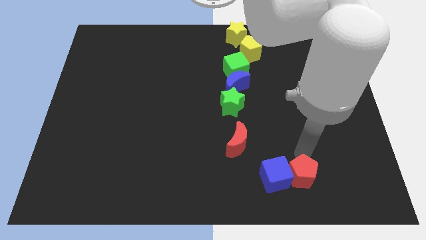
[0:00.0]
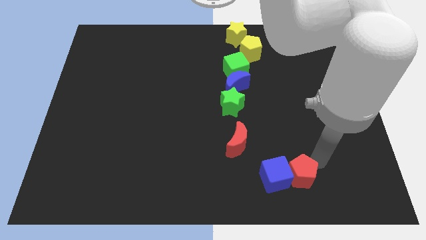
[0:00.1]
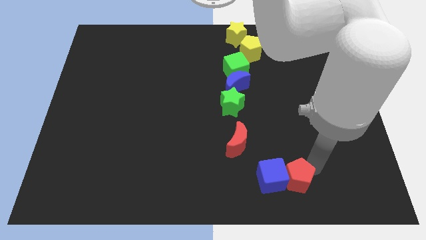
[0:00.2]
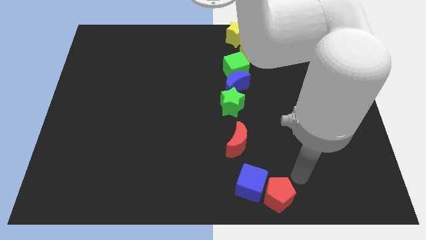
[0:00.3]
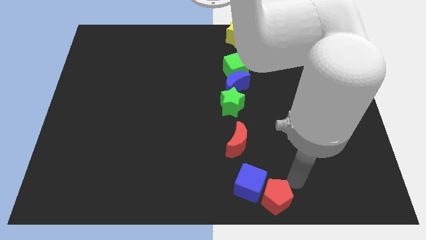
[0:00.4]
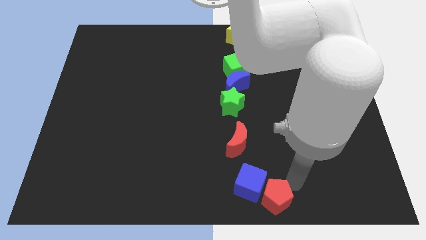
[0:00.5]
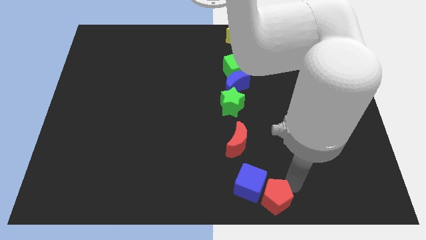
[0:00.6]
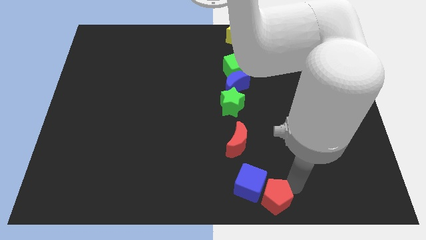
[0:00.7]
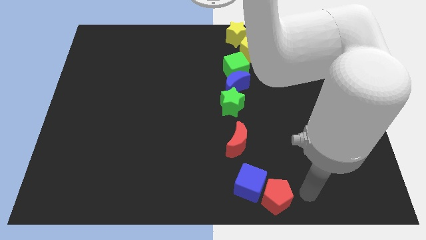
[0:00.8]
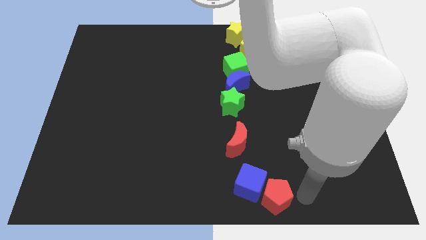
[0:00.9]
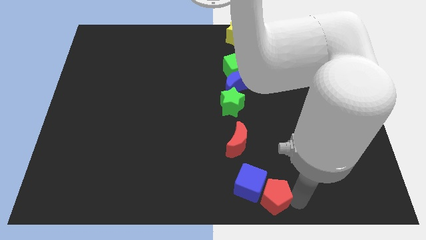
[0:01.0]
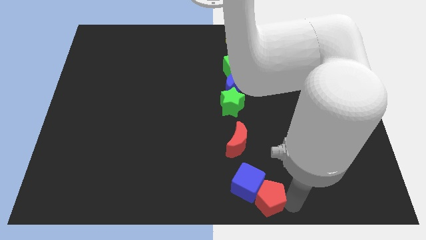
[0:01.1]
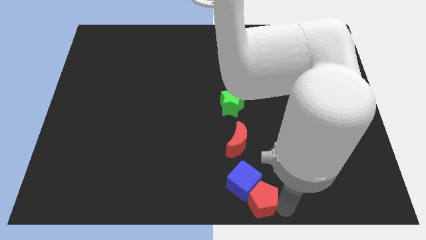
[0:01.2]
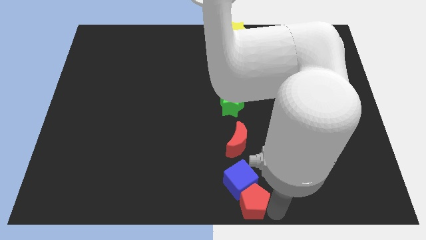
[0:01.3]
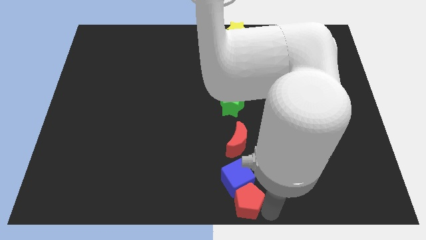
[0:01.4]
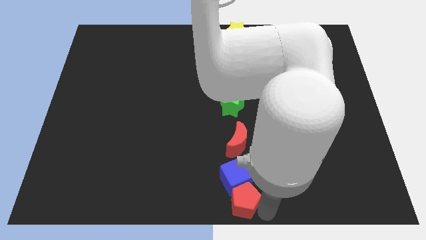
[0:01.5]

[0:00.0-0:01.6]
move red pentagon to the bottom of the board

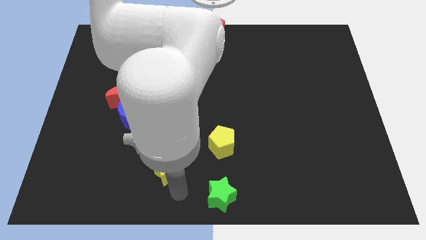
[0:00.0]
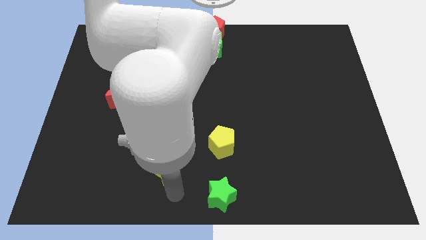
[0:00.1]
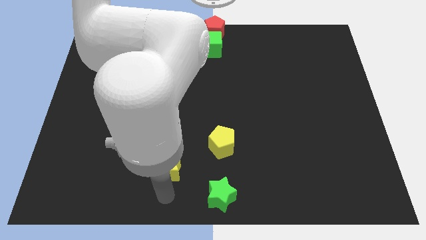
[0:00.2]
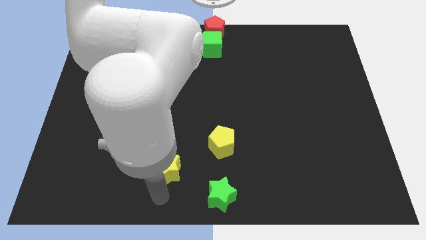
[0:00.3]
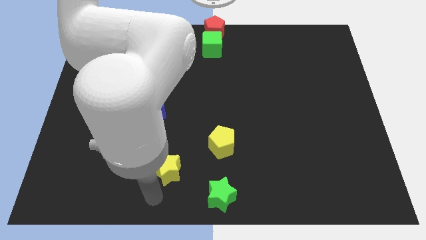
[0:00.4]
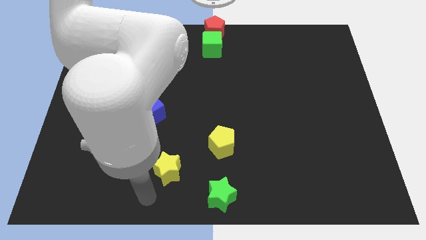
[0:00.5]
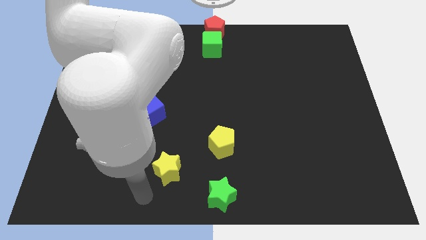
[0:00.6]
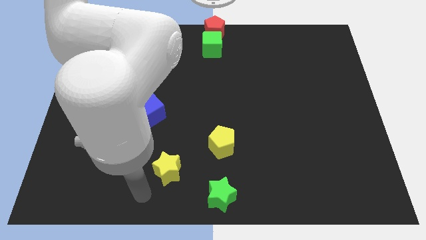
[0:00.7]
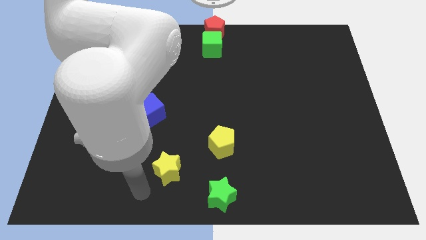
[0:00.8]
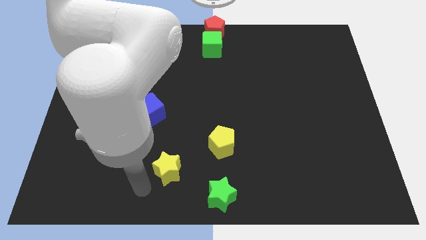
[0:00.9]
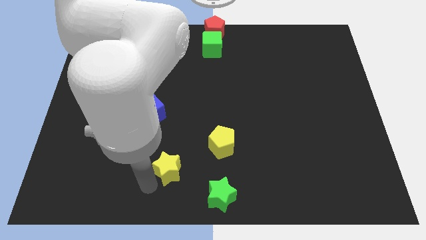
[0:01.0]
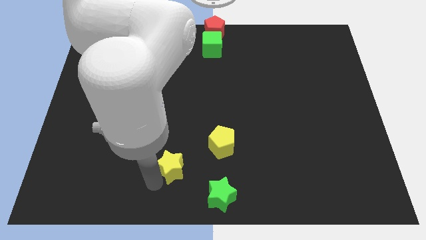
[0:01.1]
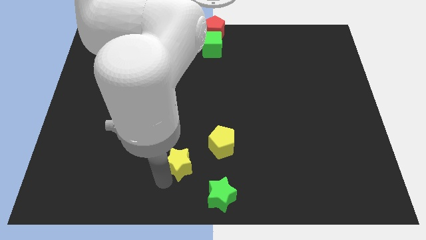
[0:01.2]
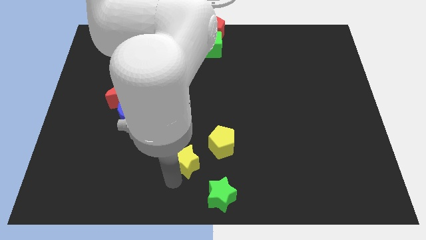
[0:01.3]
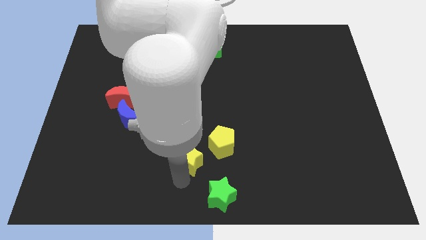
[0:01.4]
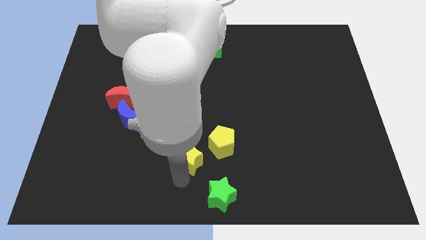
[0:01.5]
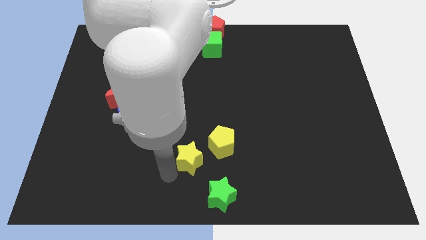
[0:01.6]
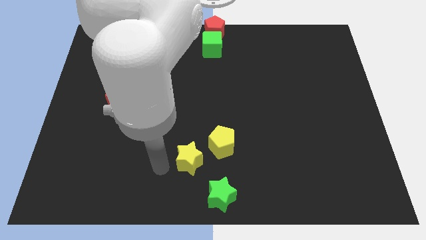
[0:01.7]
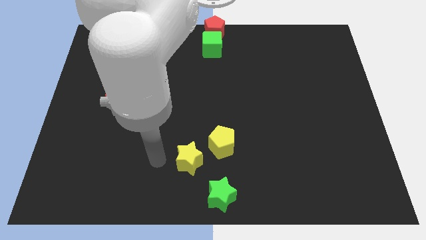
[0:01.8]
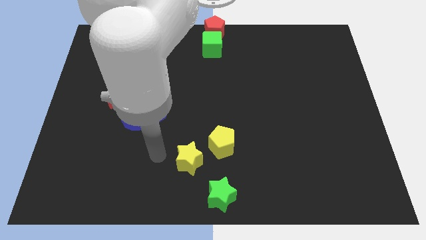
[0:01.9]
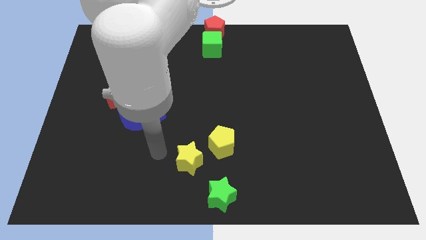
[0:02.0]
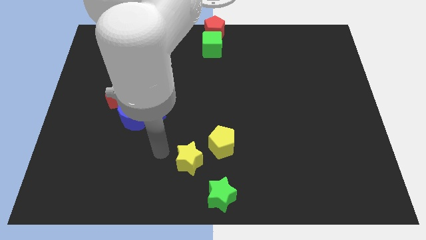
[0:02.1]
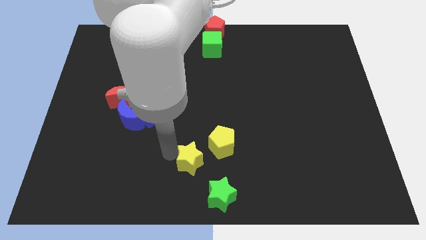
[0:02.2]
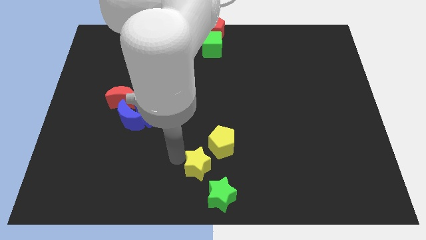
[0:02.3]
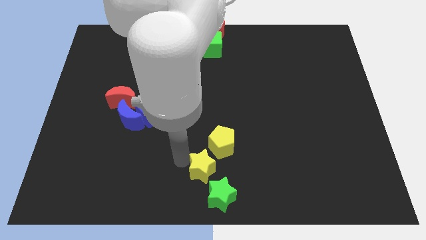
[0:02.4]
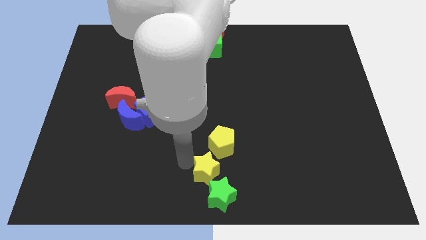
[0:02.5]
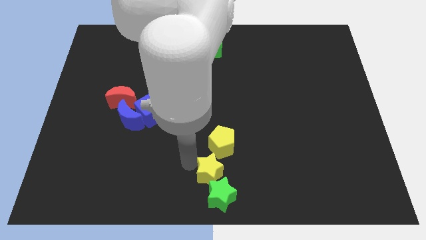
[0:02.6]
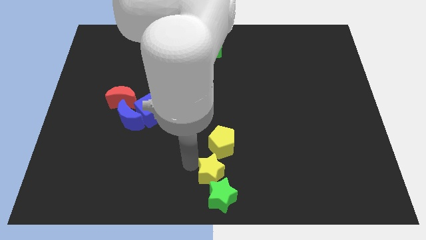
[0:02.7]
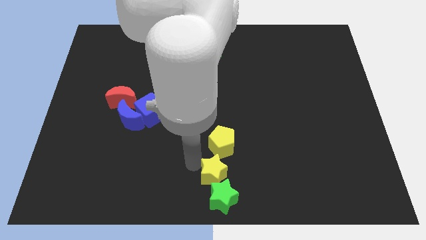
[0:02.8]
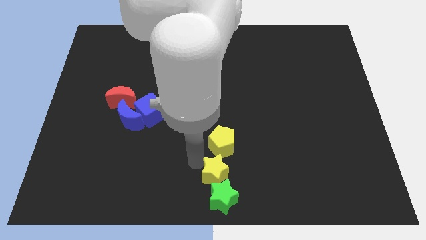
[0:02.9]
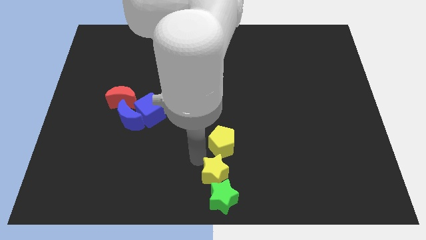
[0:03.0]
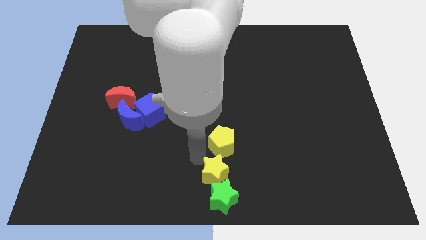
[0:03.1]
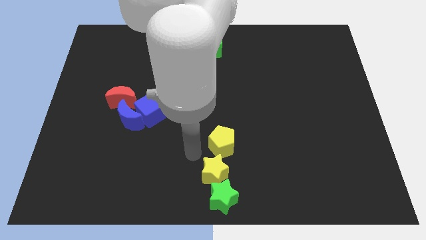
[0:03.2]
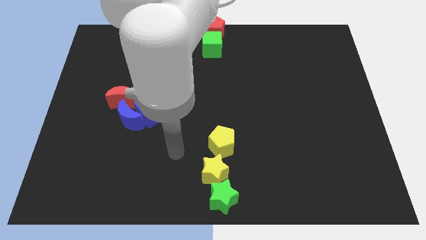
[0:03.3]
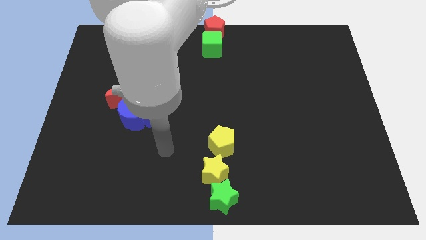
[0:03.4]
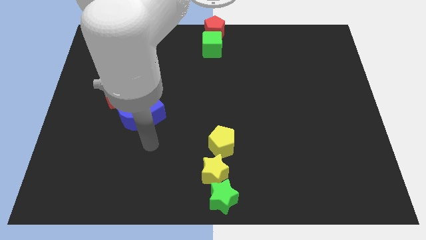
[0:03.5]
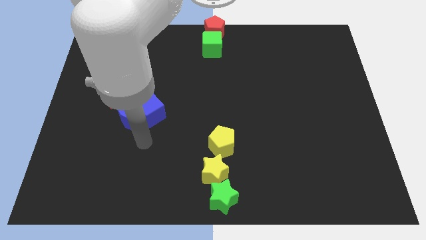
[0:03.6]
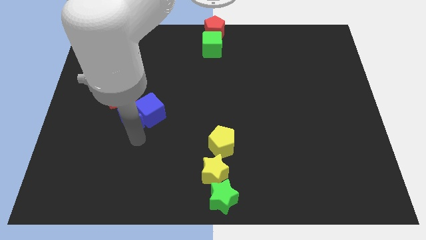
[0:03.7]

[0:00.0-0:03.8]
place the yellow star above the green star

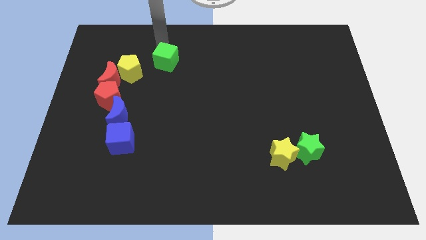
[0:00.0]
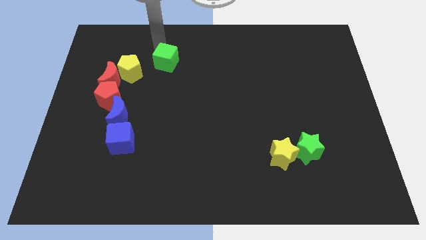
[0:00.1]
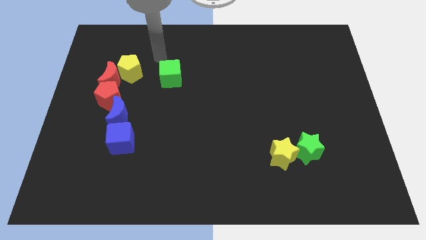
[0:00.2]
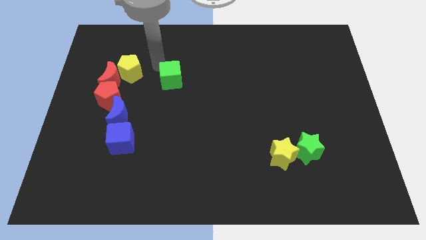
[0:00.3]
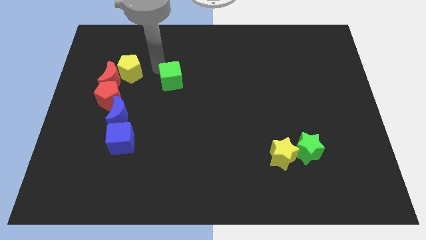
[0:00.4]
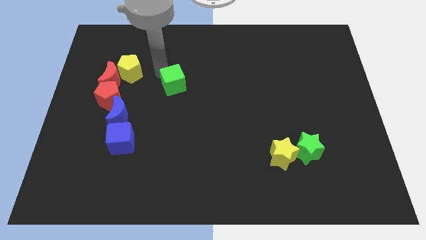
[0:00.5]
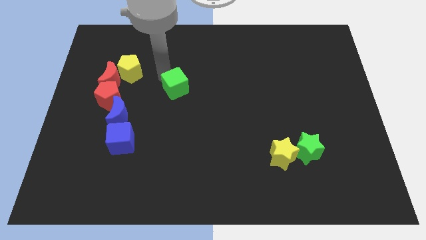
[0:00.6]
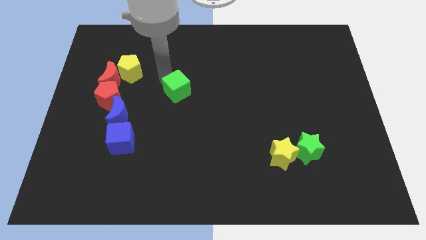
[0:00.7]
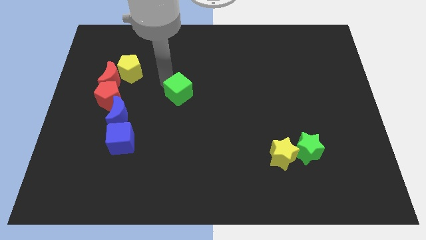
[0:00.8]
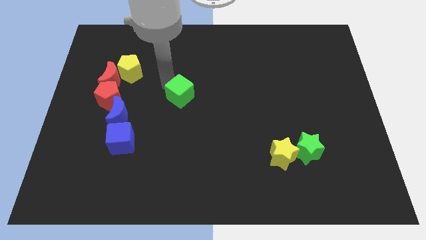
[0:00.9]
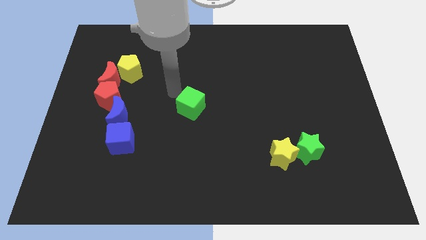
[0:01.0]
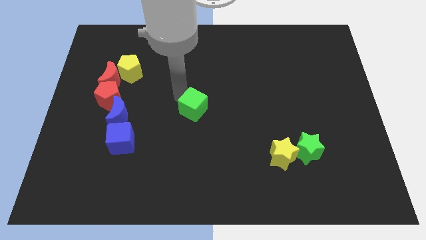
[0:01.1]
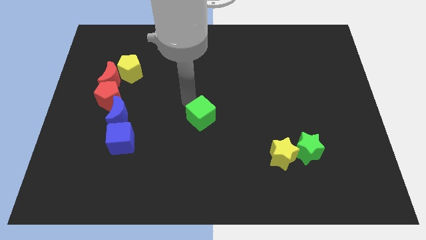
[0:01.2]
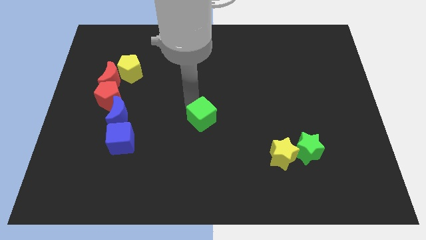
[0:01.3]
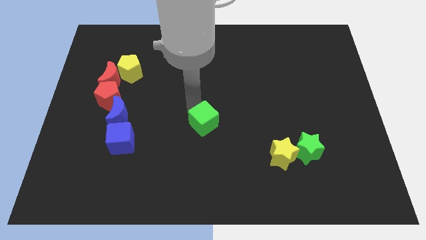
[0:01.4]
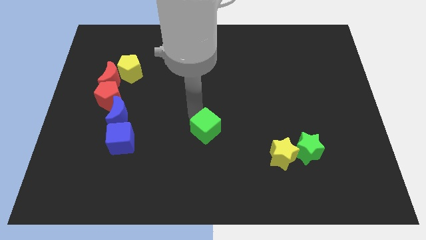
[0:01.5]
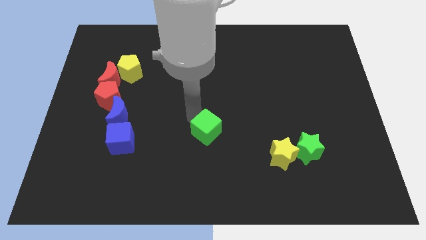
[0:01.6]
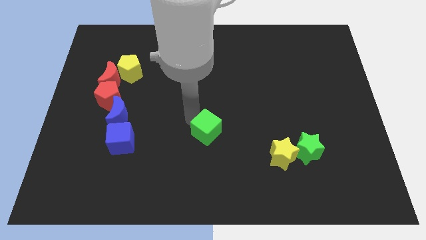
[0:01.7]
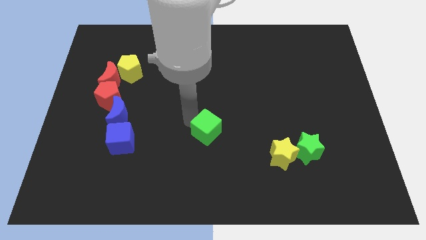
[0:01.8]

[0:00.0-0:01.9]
move the green cube right to the blue cube

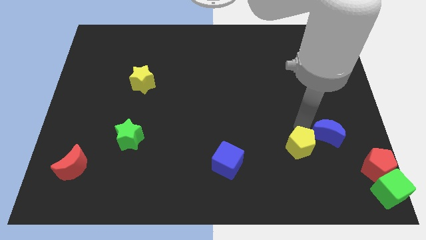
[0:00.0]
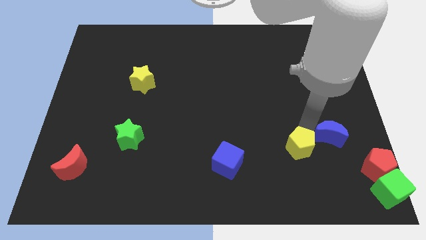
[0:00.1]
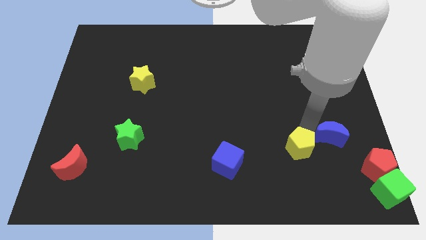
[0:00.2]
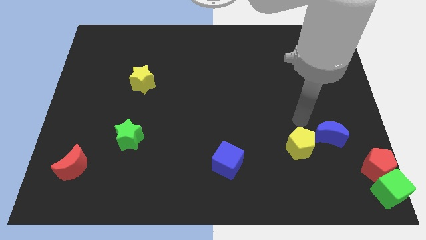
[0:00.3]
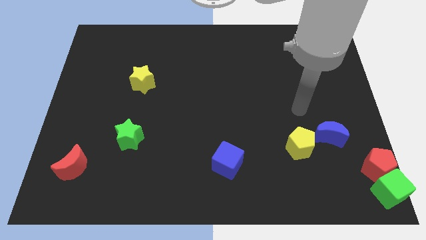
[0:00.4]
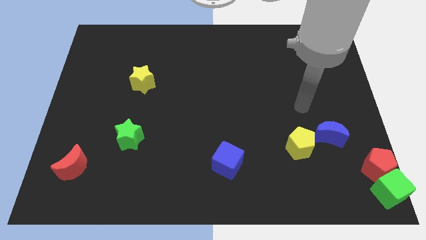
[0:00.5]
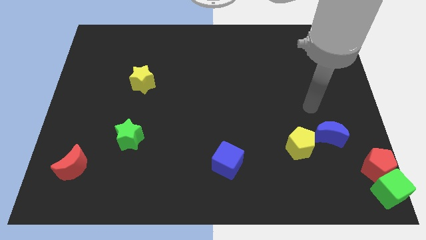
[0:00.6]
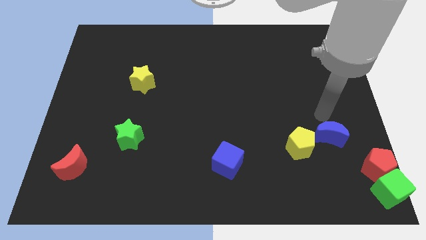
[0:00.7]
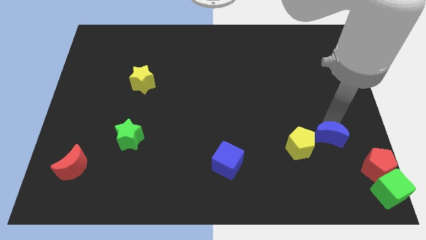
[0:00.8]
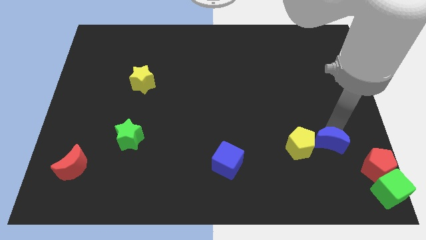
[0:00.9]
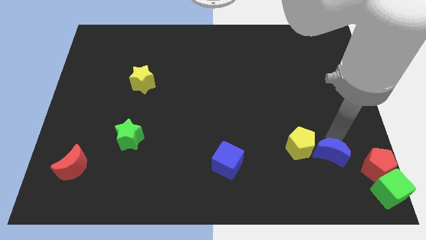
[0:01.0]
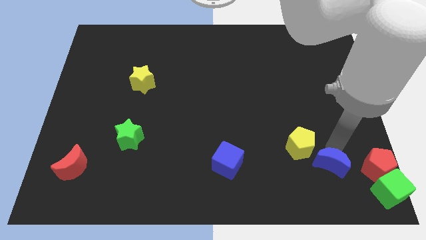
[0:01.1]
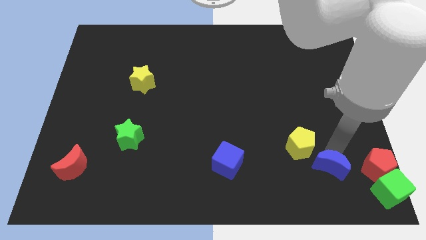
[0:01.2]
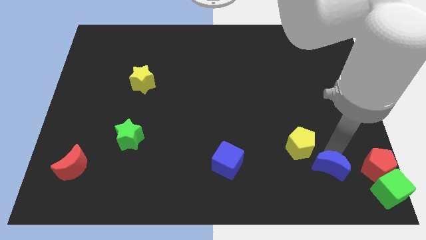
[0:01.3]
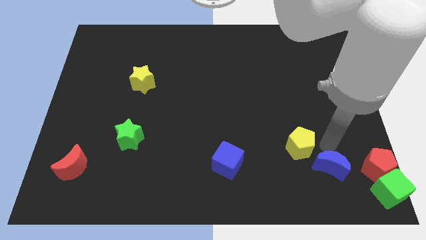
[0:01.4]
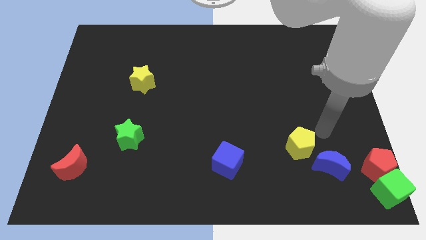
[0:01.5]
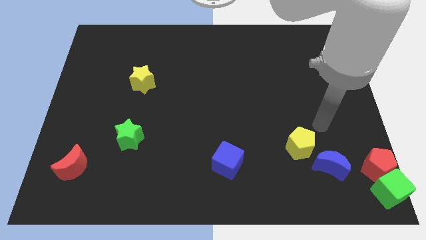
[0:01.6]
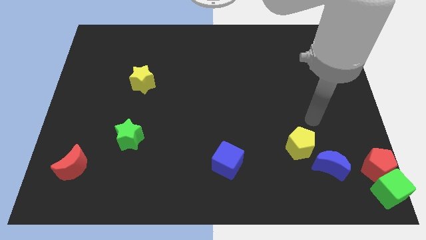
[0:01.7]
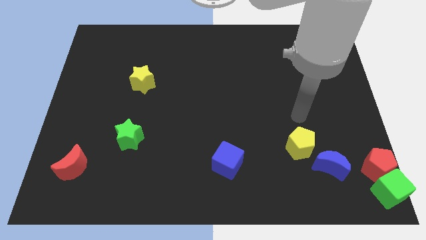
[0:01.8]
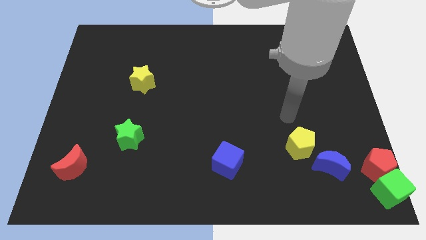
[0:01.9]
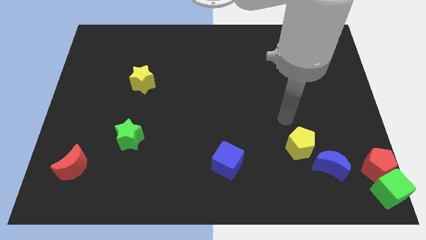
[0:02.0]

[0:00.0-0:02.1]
move blue moon to the left of red pentagon
